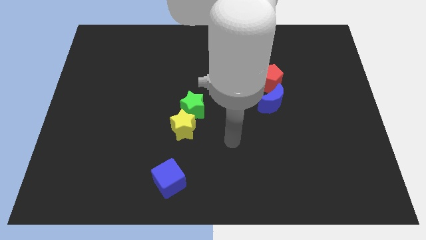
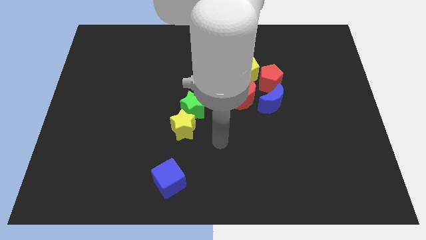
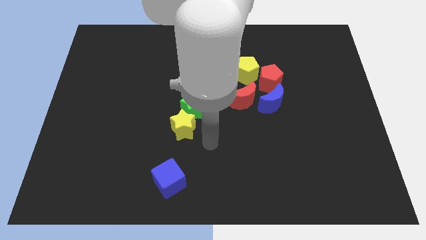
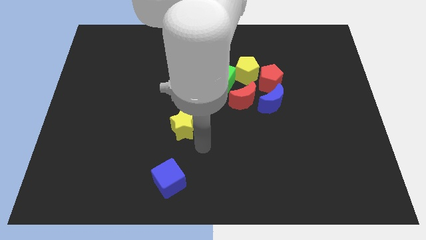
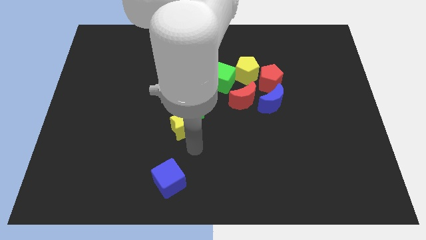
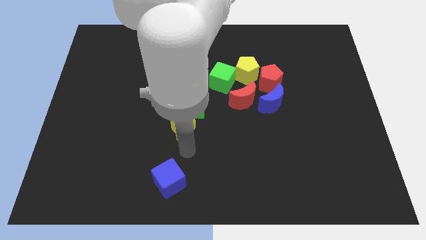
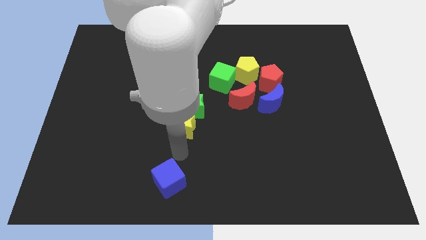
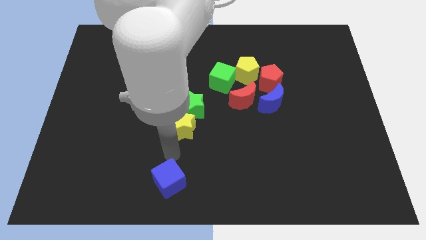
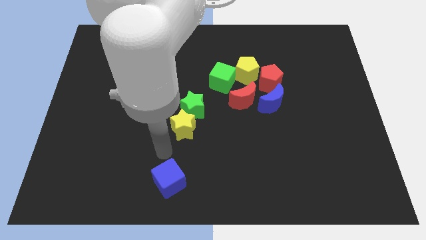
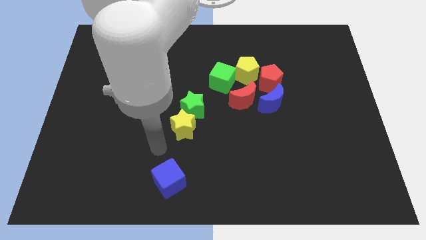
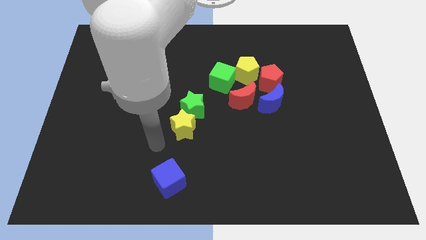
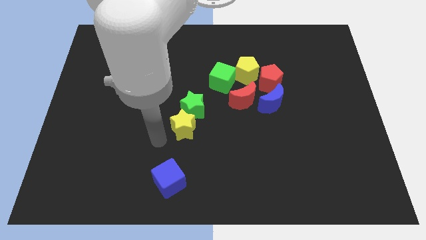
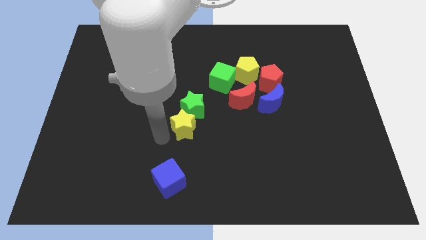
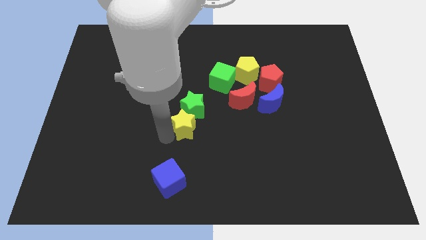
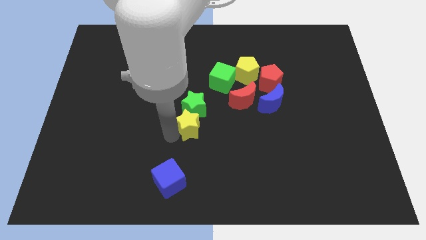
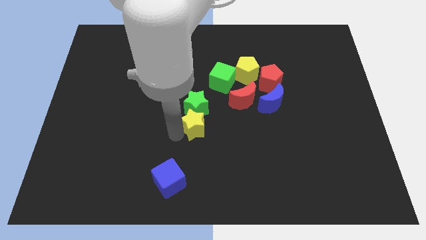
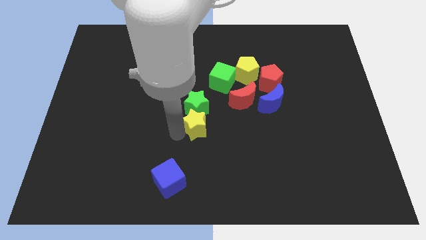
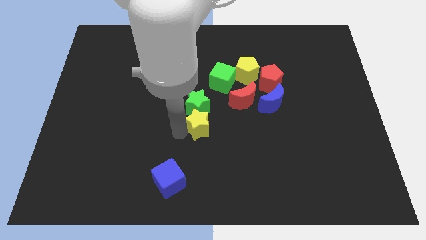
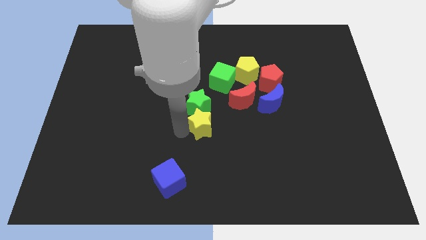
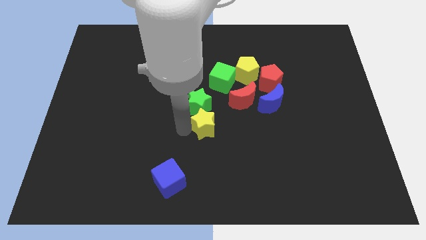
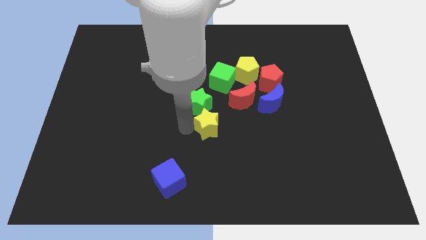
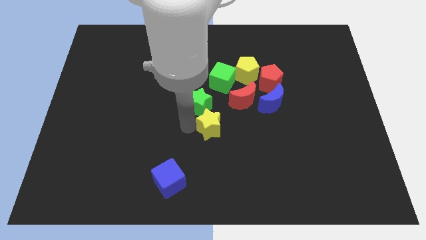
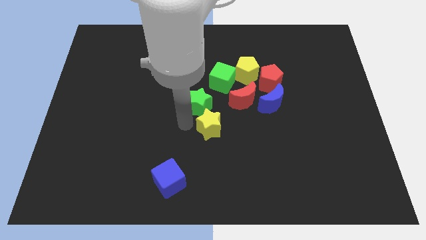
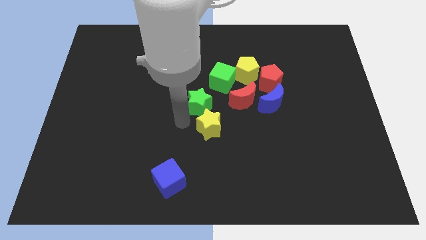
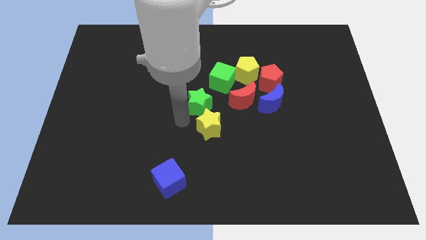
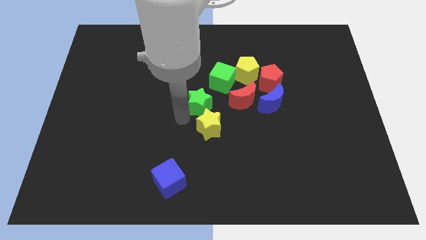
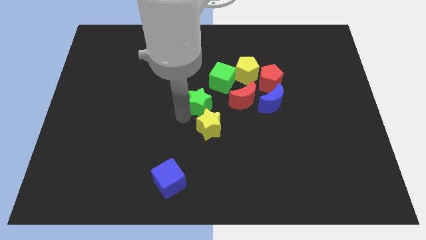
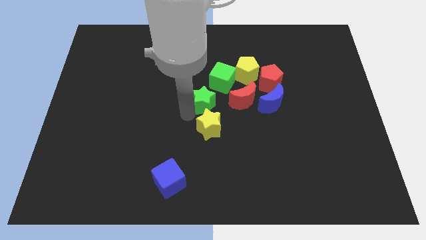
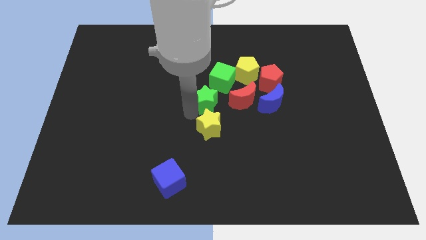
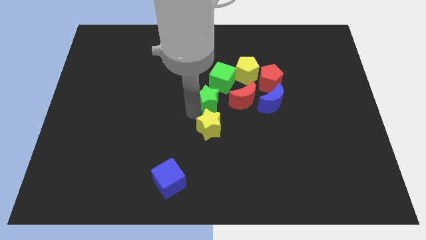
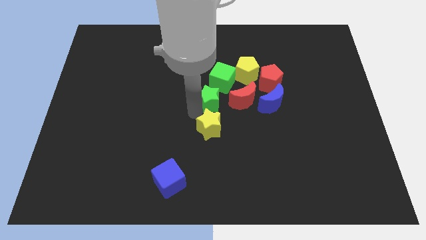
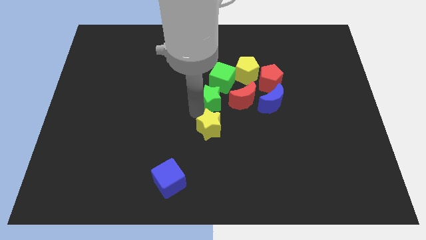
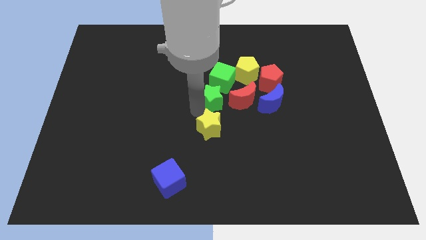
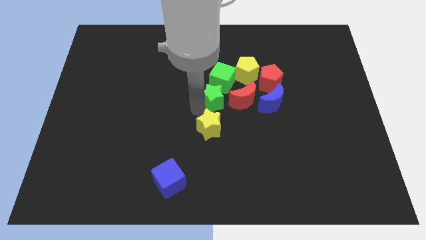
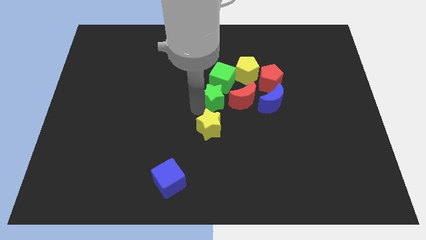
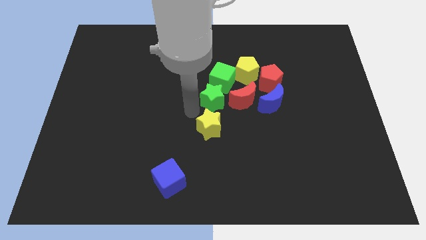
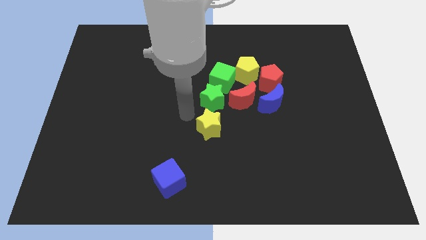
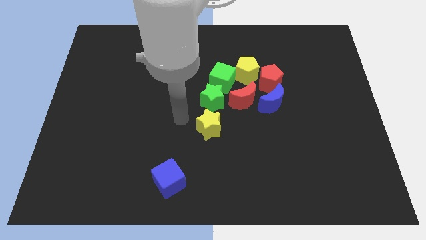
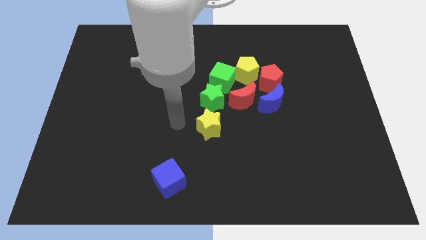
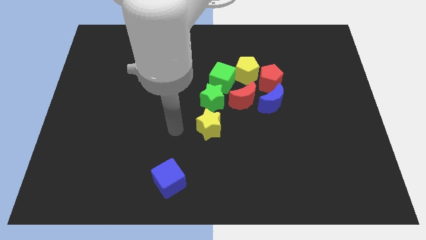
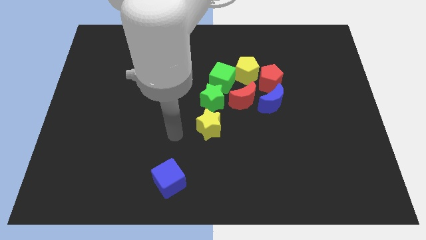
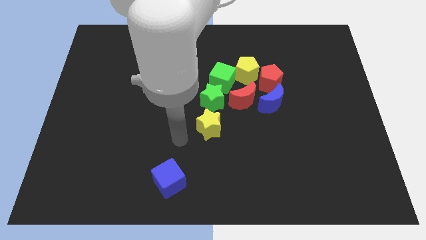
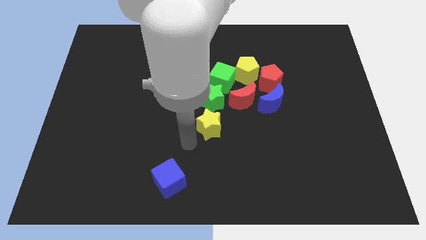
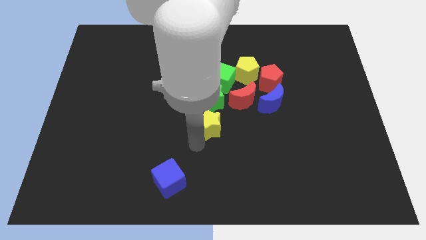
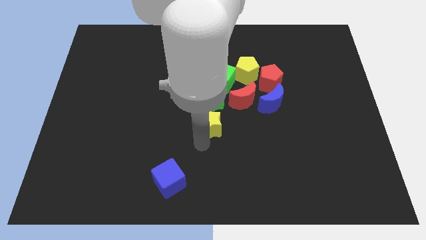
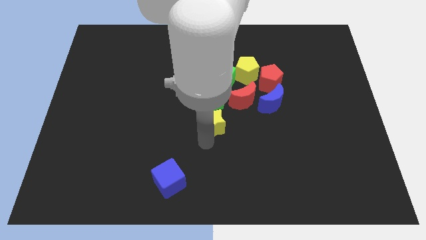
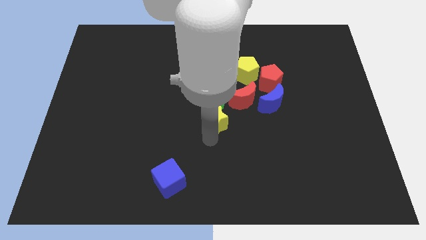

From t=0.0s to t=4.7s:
push the green star into the group of blocks

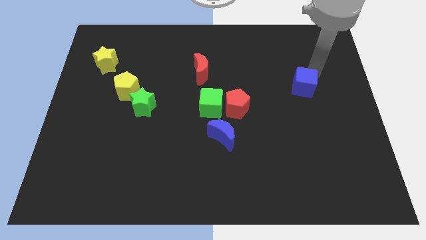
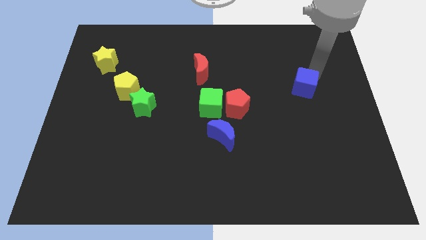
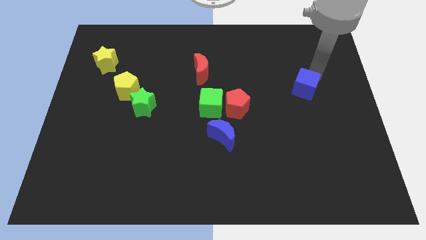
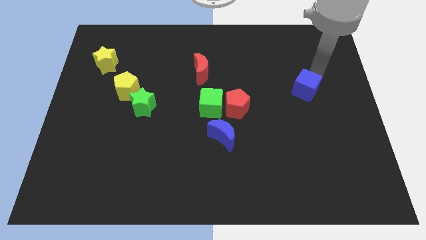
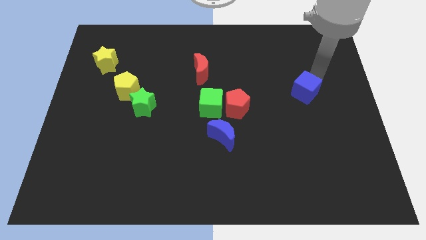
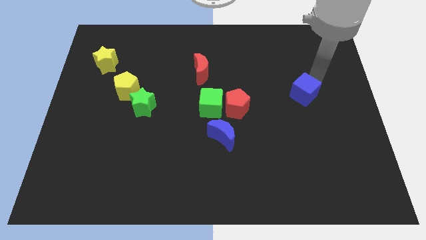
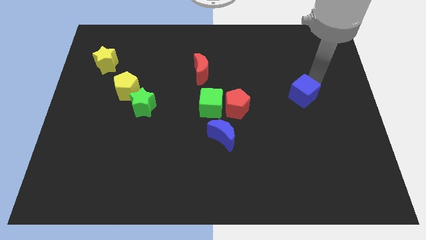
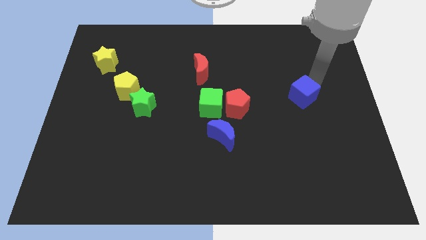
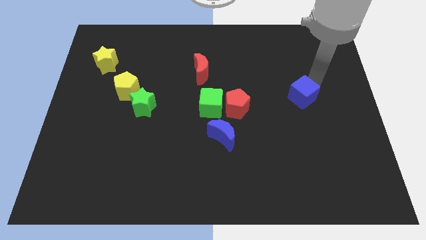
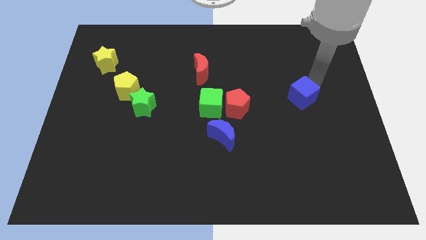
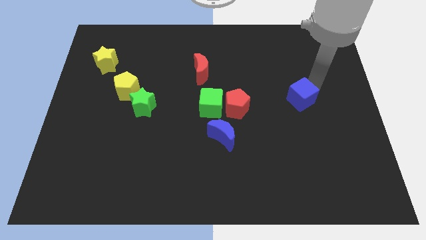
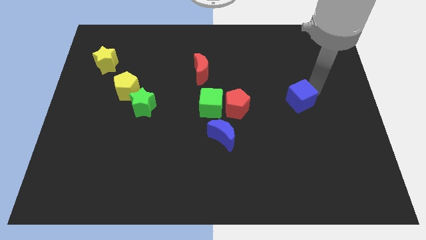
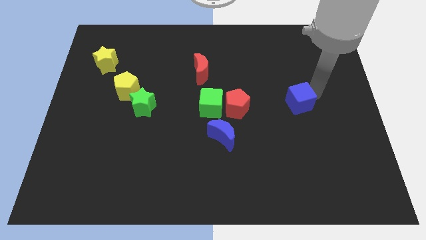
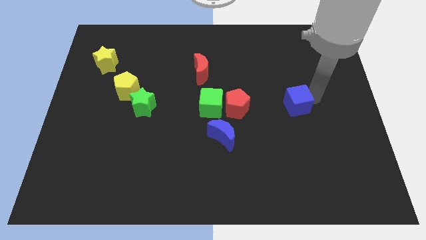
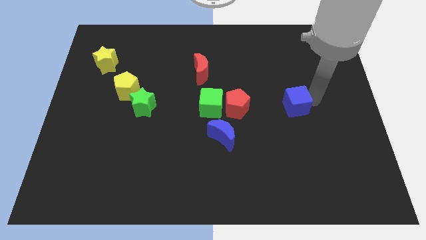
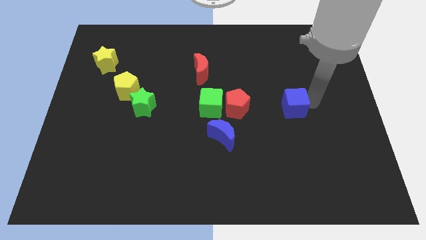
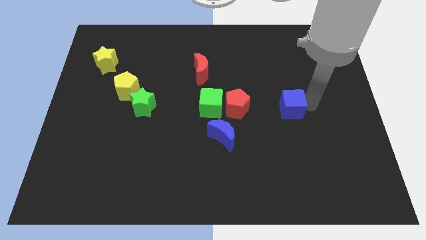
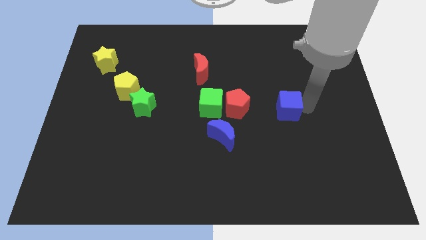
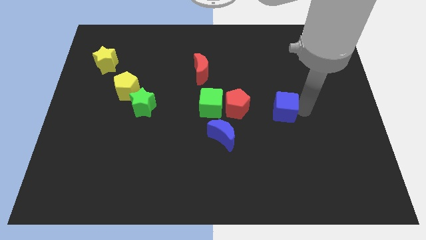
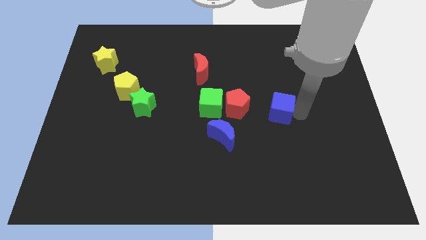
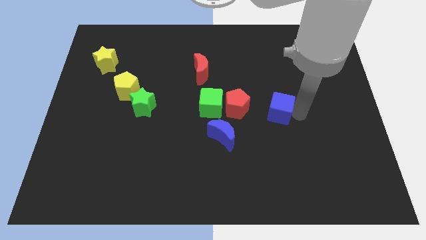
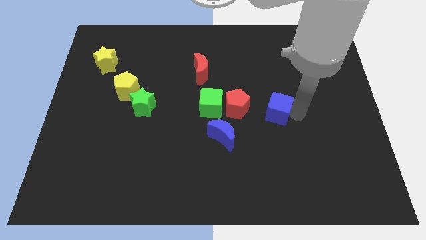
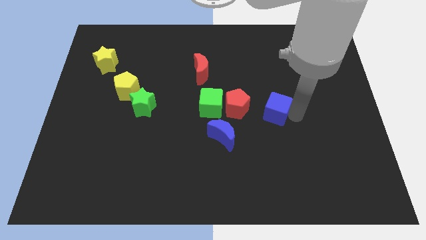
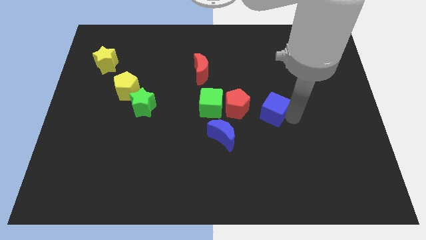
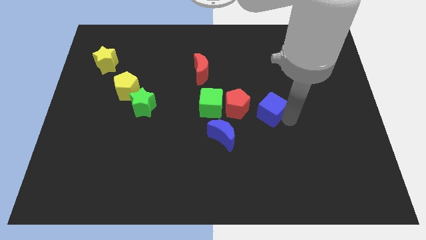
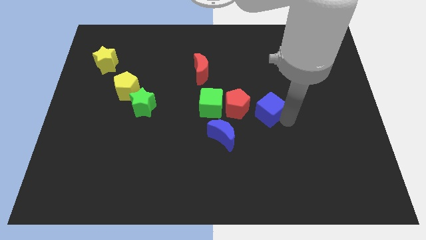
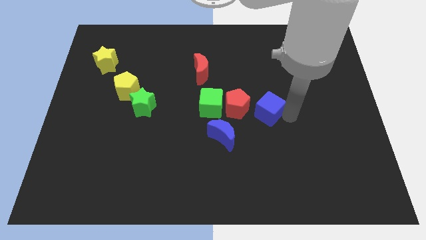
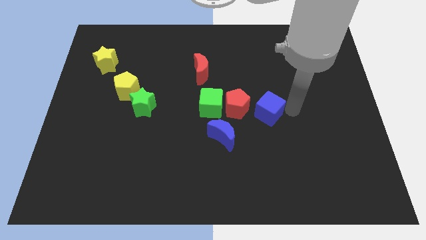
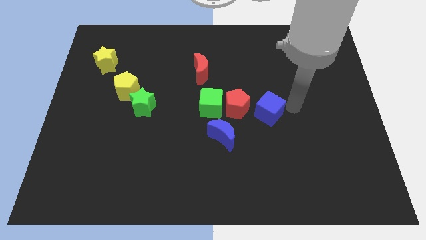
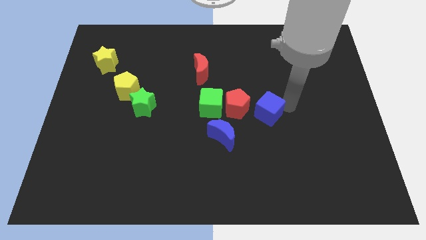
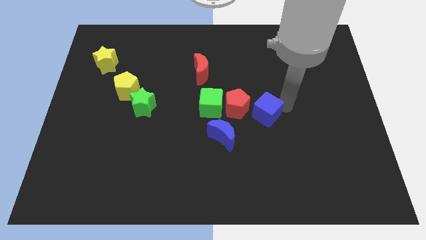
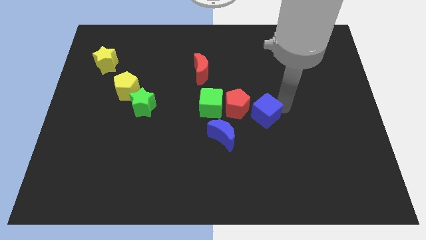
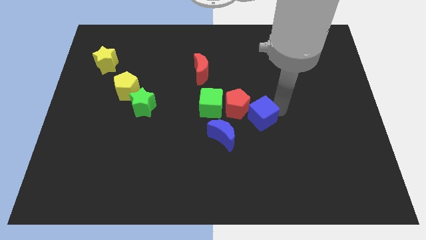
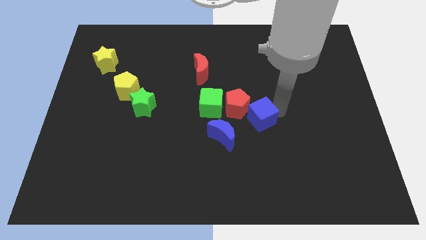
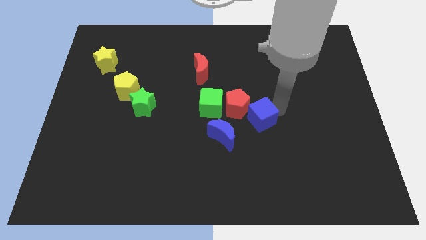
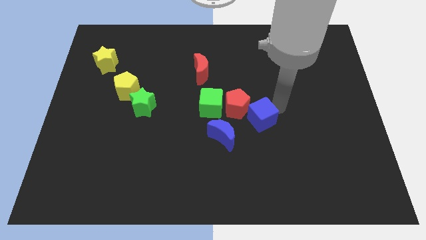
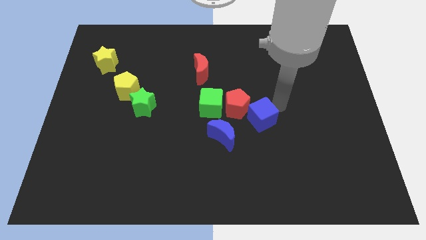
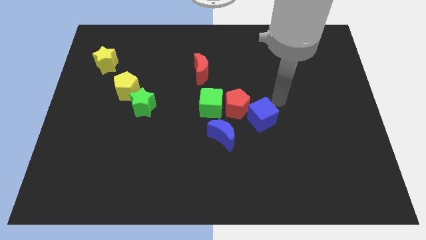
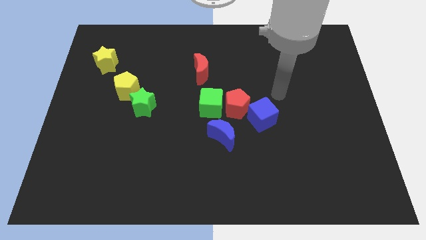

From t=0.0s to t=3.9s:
push the blue cube close to the red pentagon

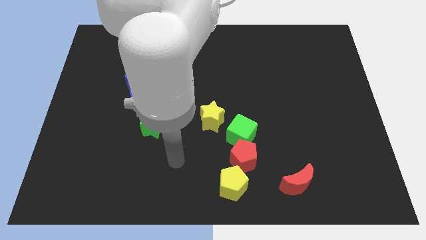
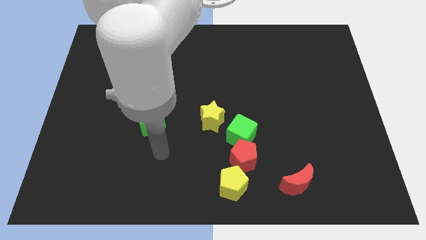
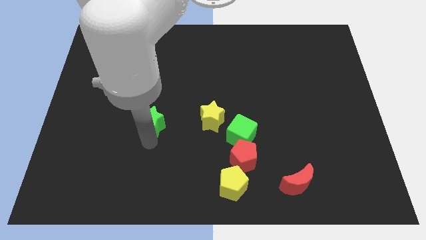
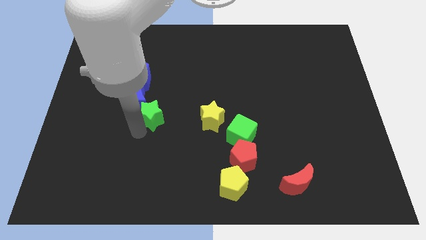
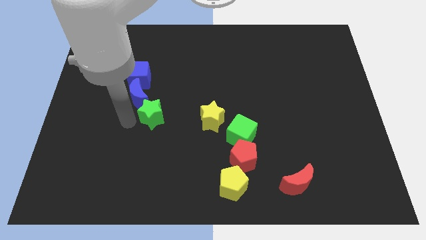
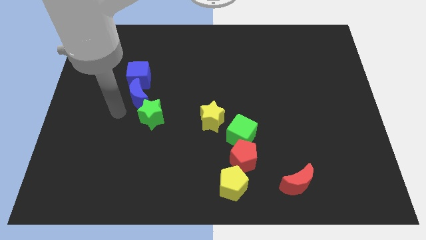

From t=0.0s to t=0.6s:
push the green star into the blue moon
